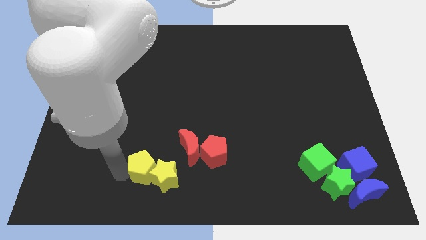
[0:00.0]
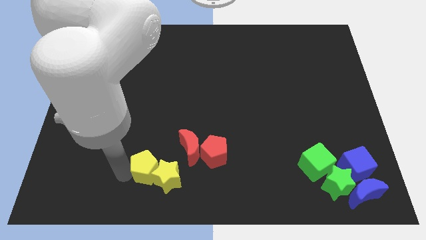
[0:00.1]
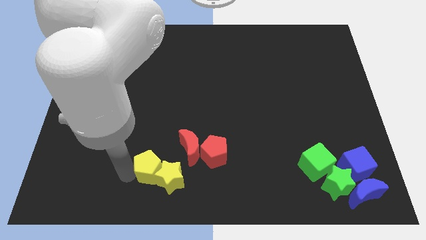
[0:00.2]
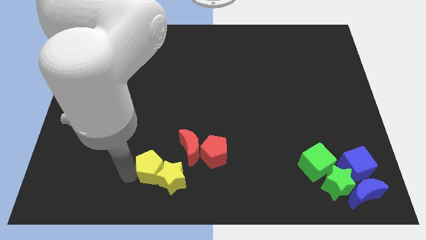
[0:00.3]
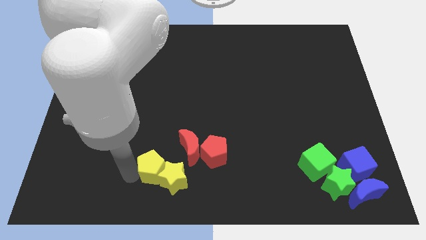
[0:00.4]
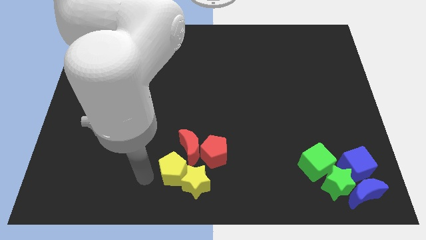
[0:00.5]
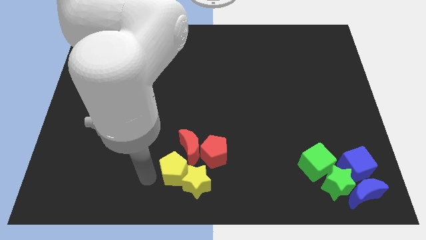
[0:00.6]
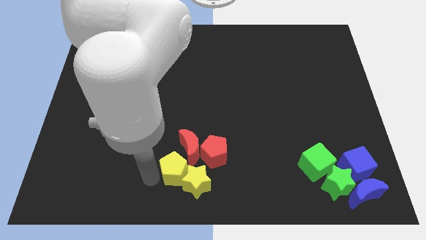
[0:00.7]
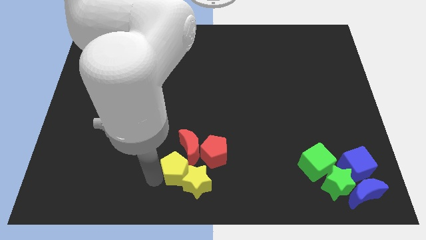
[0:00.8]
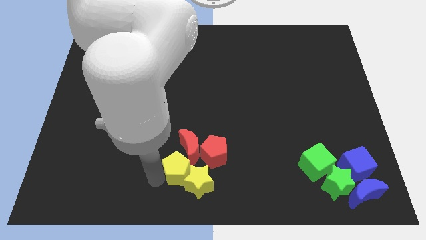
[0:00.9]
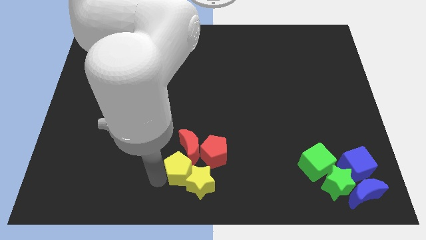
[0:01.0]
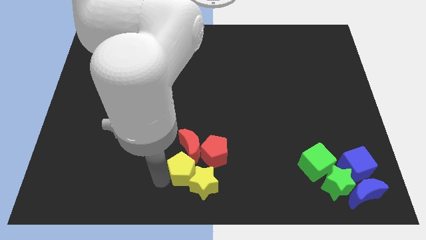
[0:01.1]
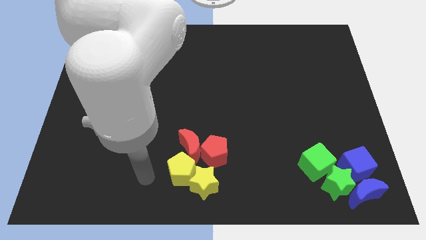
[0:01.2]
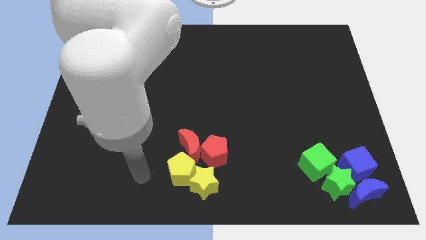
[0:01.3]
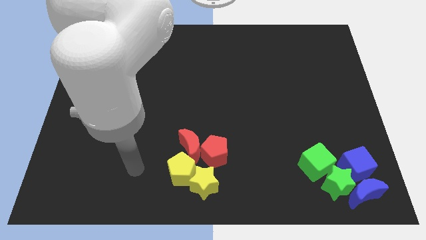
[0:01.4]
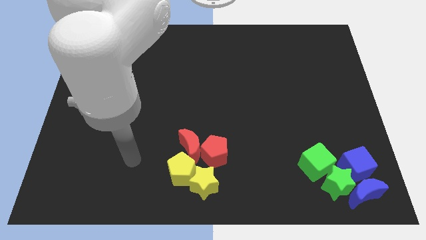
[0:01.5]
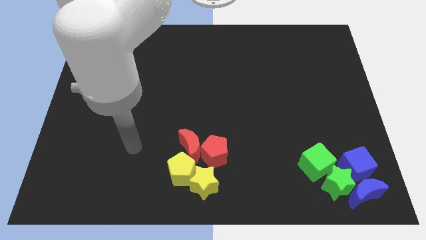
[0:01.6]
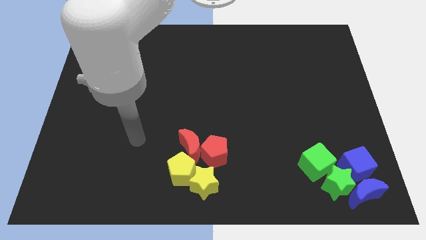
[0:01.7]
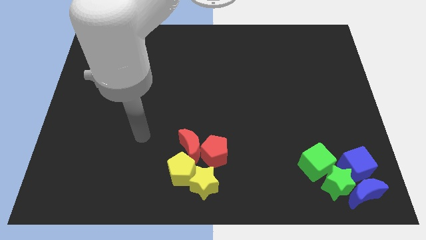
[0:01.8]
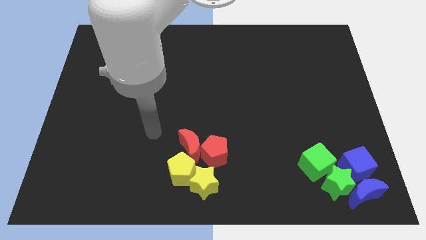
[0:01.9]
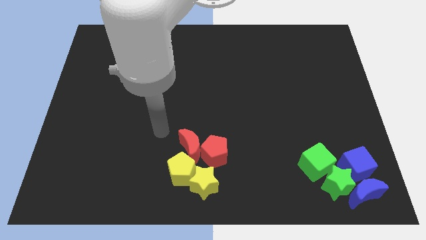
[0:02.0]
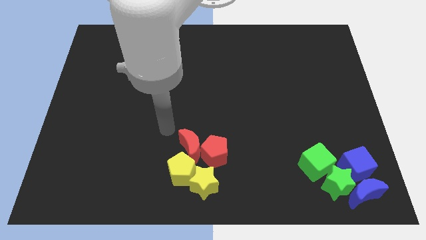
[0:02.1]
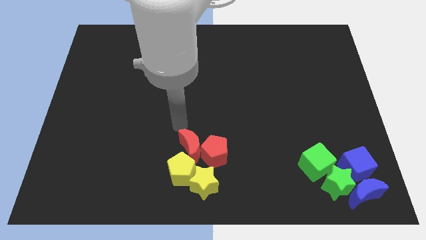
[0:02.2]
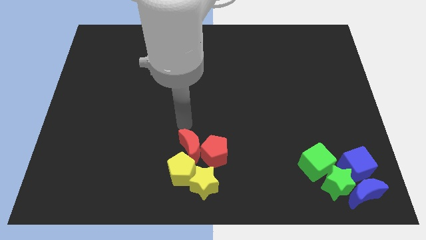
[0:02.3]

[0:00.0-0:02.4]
push the yellow star and yellow pentagon to the right side of the board

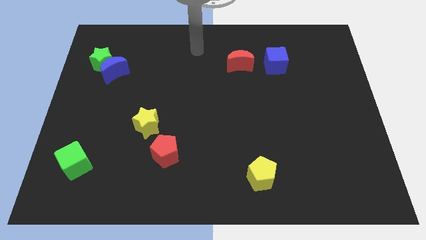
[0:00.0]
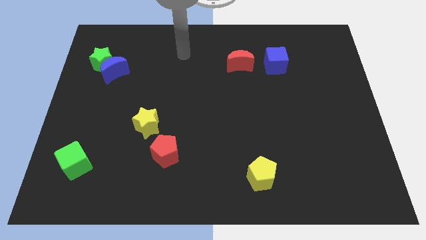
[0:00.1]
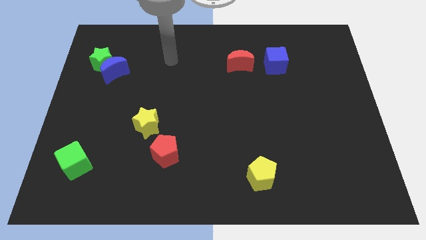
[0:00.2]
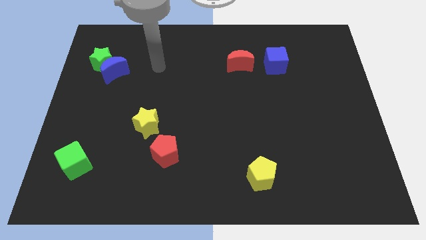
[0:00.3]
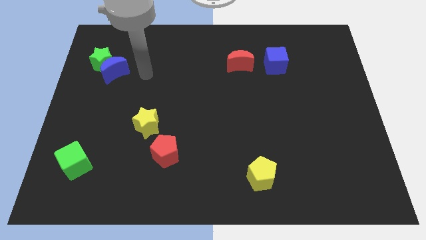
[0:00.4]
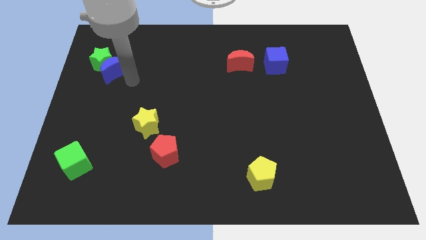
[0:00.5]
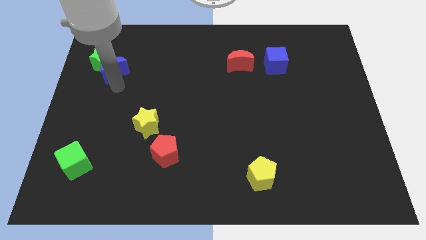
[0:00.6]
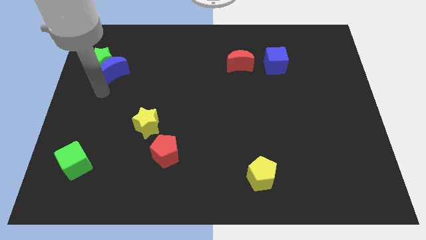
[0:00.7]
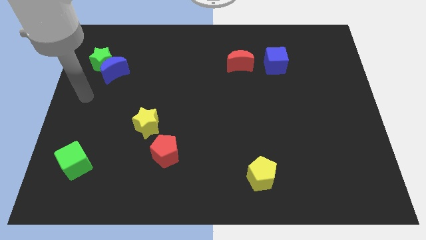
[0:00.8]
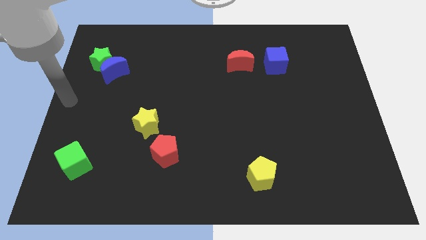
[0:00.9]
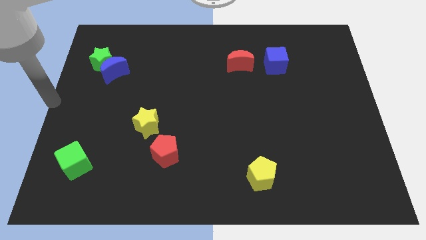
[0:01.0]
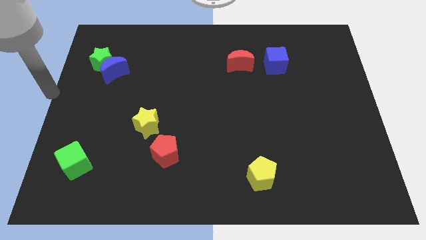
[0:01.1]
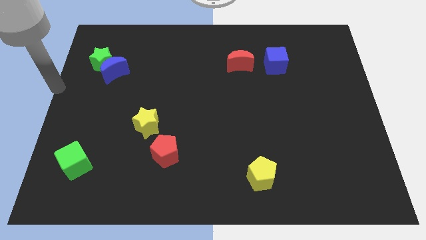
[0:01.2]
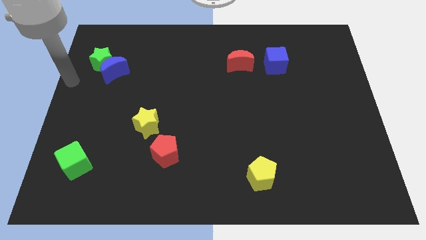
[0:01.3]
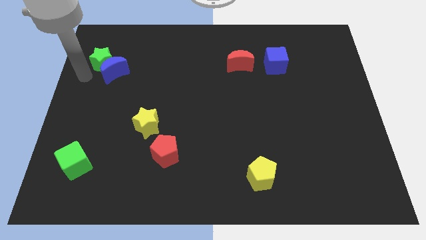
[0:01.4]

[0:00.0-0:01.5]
move your arm towards the blue crescent

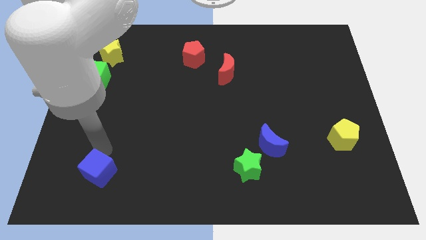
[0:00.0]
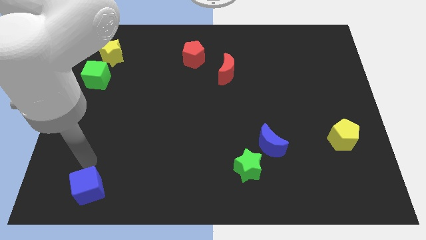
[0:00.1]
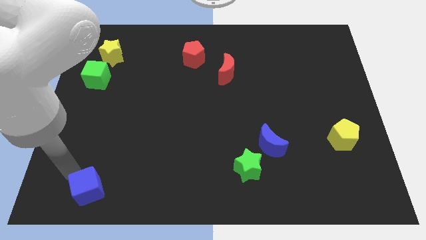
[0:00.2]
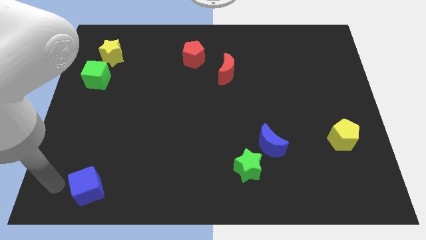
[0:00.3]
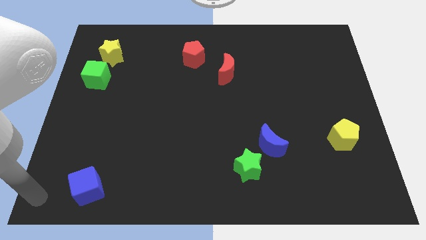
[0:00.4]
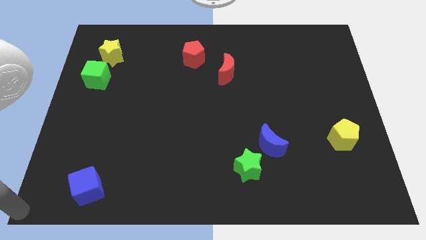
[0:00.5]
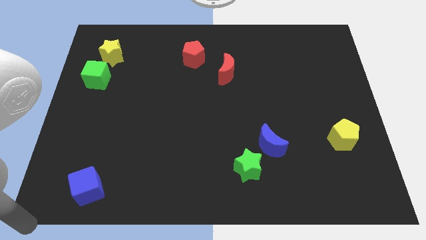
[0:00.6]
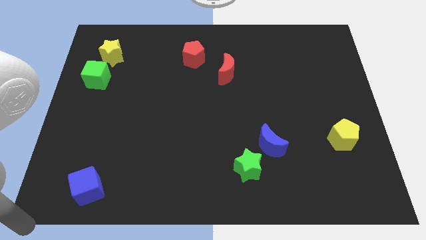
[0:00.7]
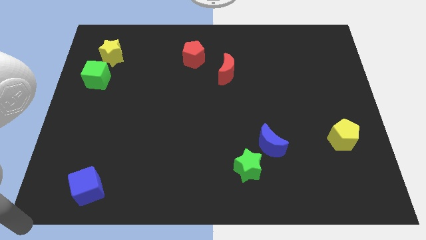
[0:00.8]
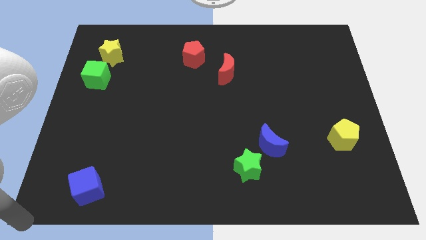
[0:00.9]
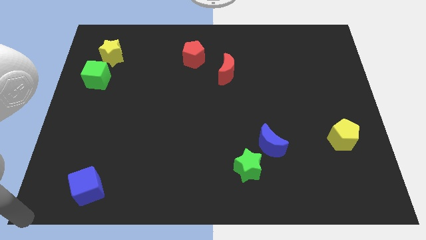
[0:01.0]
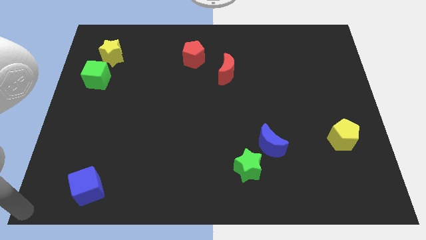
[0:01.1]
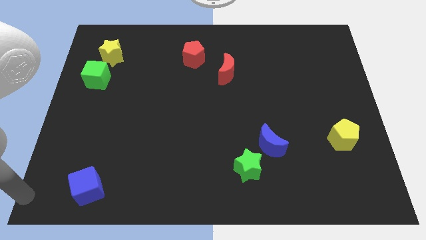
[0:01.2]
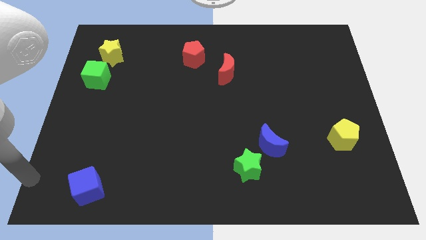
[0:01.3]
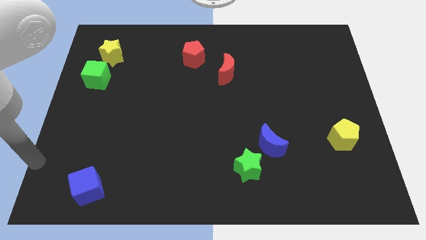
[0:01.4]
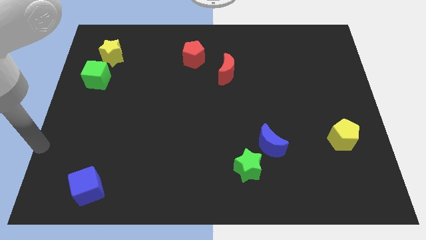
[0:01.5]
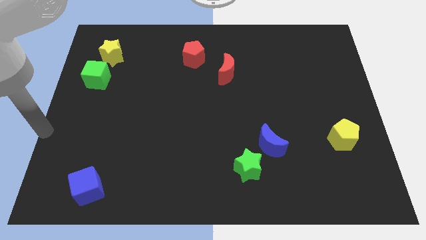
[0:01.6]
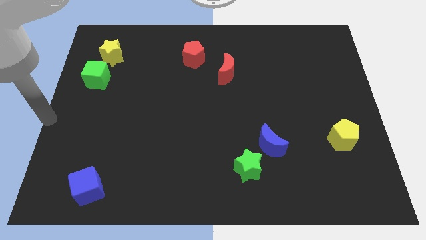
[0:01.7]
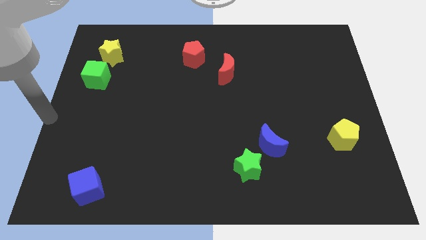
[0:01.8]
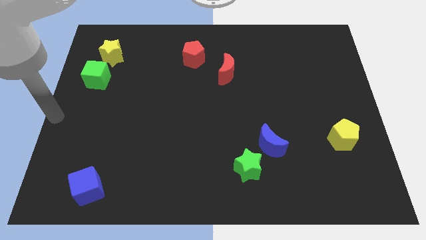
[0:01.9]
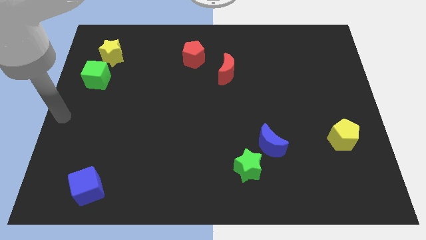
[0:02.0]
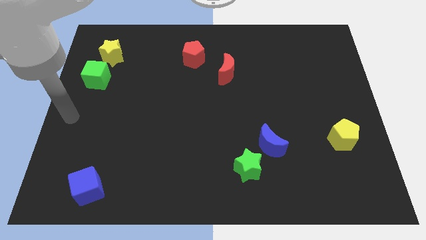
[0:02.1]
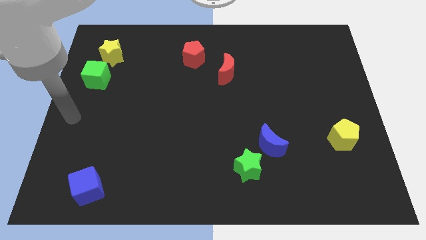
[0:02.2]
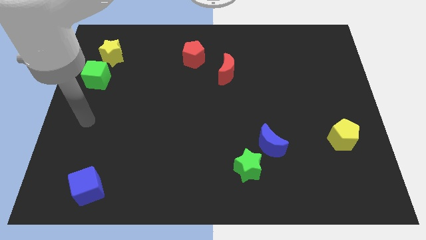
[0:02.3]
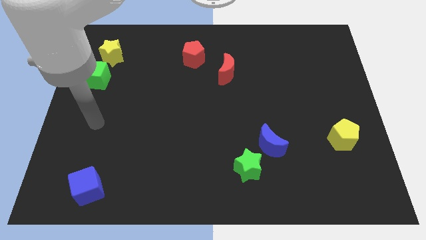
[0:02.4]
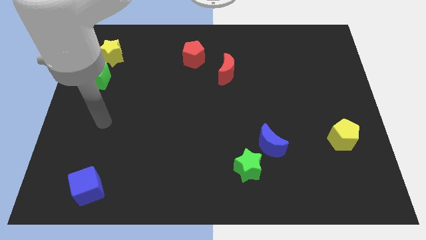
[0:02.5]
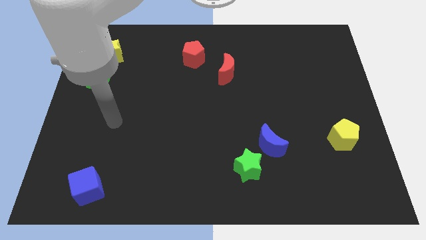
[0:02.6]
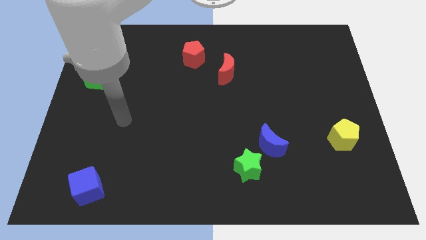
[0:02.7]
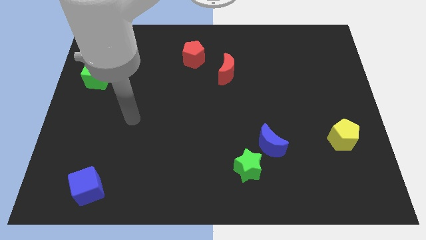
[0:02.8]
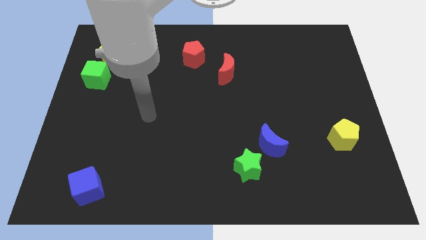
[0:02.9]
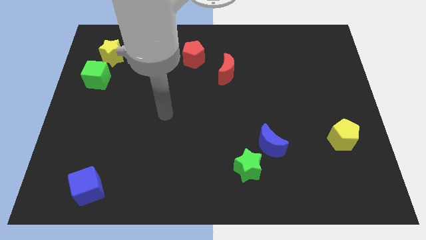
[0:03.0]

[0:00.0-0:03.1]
move the blue cube slightly towards the bottom of left corner

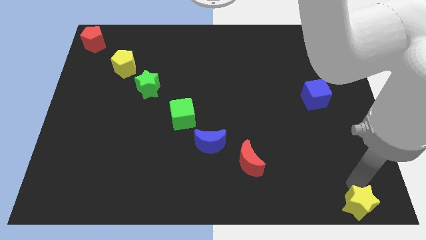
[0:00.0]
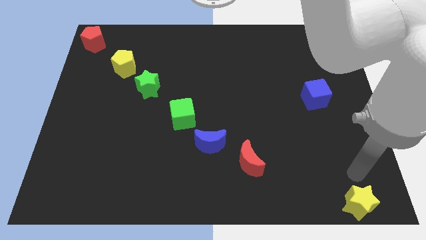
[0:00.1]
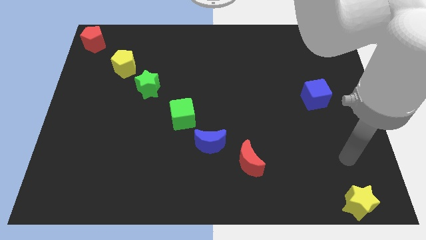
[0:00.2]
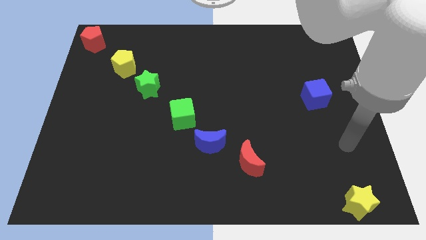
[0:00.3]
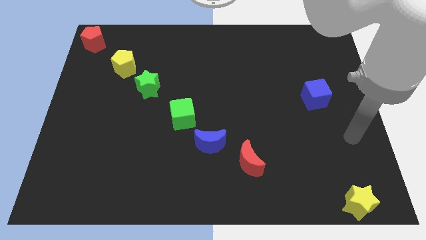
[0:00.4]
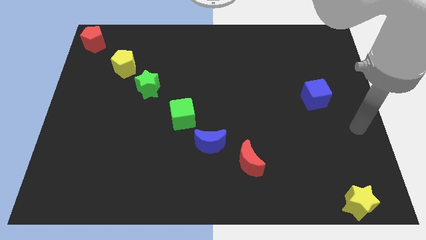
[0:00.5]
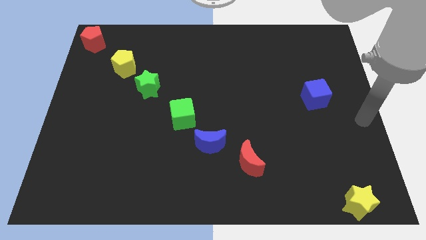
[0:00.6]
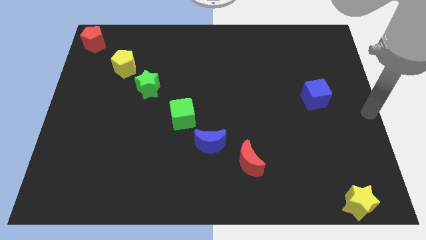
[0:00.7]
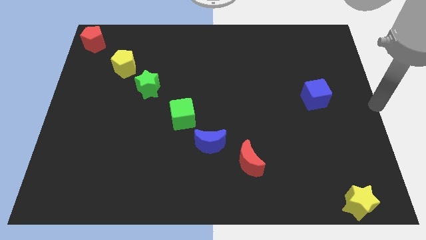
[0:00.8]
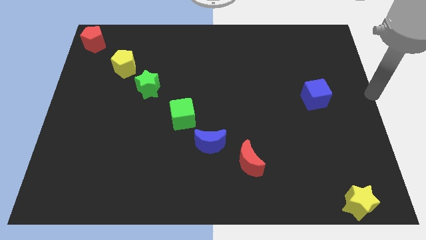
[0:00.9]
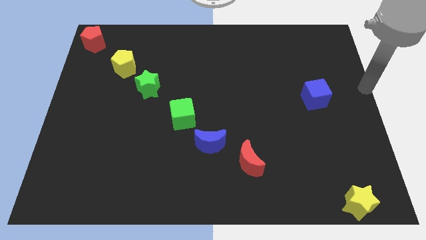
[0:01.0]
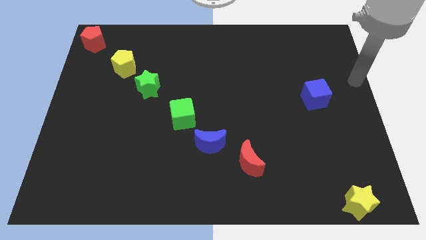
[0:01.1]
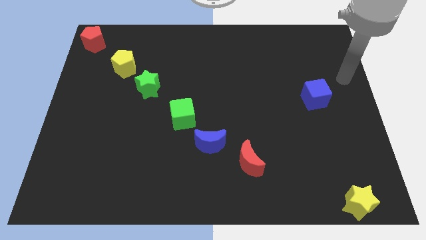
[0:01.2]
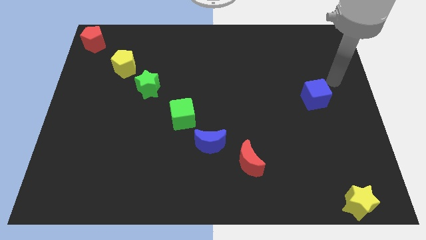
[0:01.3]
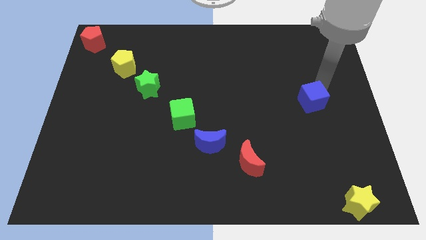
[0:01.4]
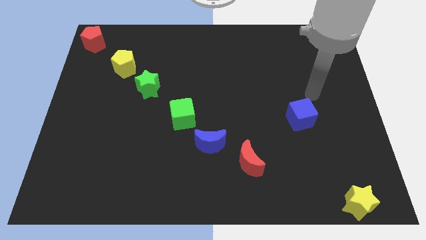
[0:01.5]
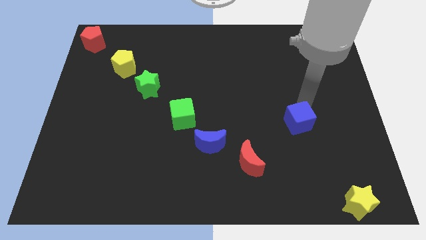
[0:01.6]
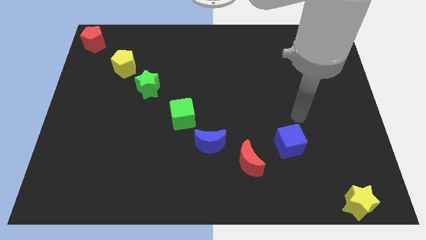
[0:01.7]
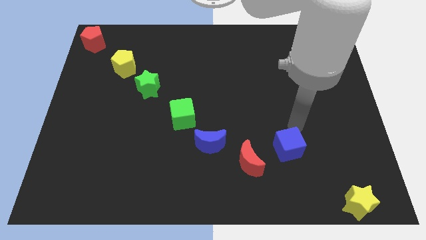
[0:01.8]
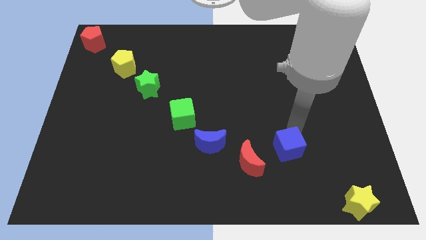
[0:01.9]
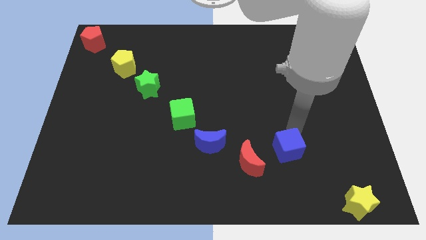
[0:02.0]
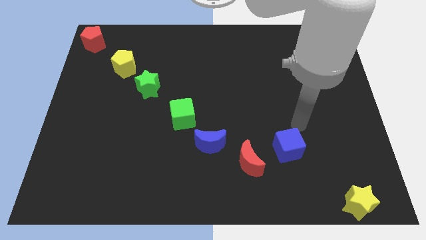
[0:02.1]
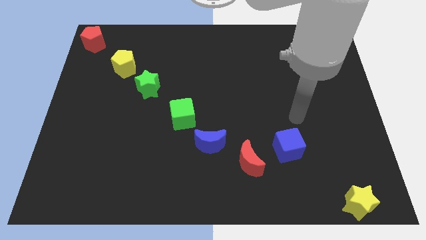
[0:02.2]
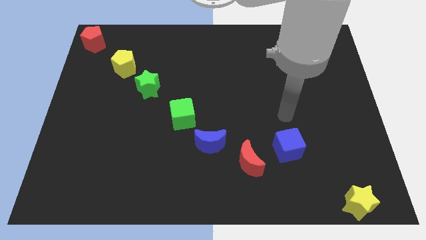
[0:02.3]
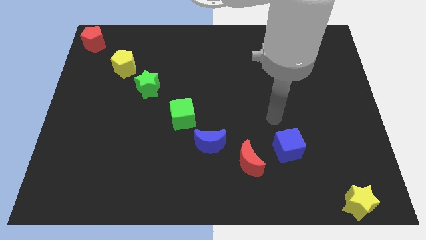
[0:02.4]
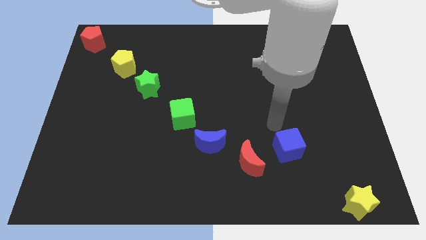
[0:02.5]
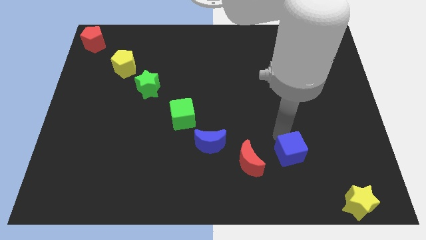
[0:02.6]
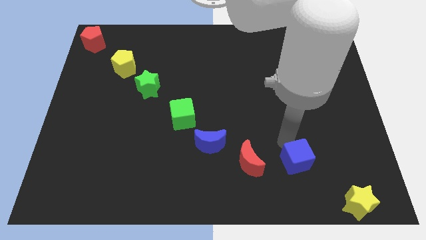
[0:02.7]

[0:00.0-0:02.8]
push the blue cube to the right of the red crescent
